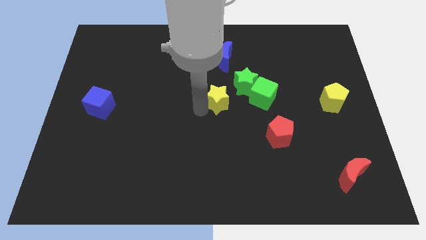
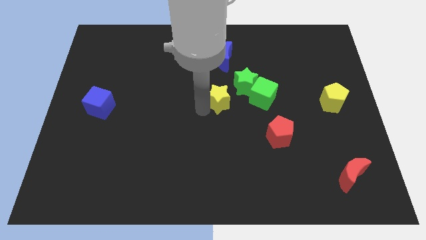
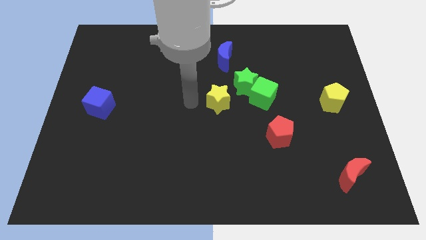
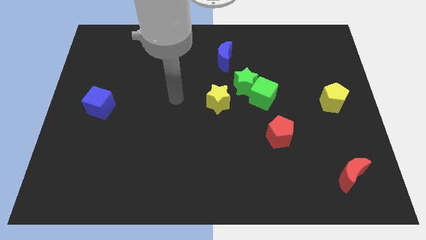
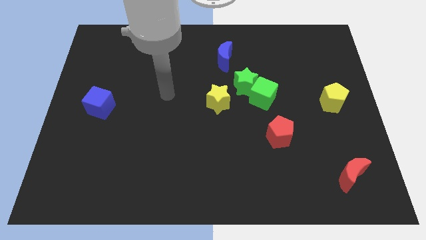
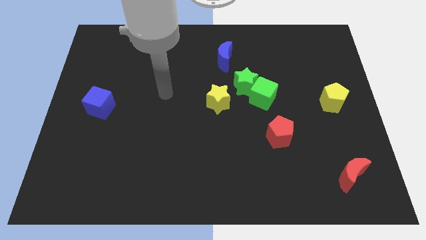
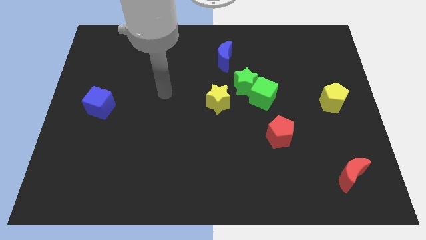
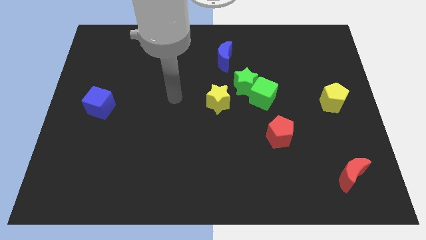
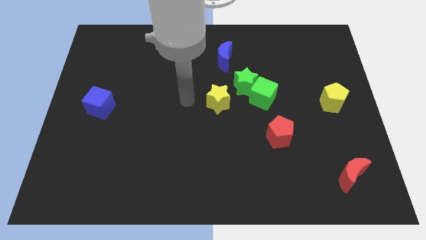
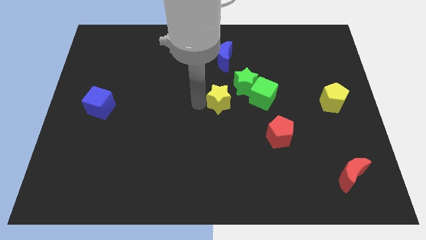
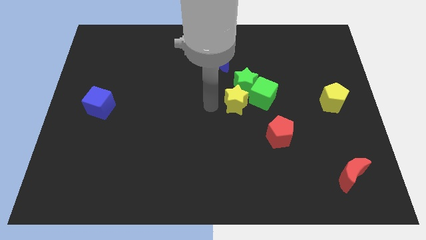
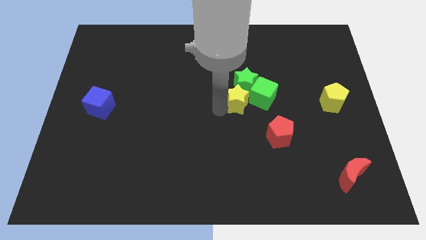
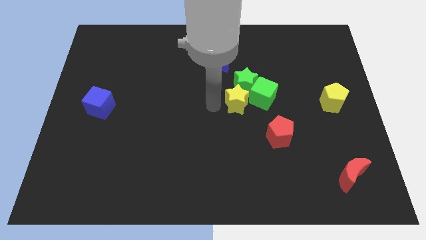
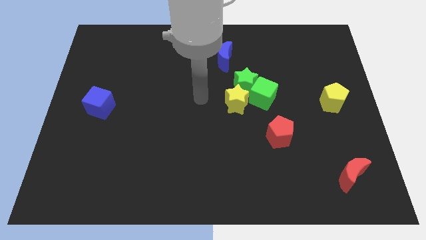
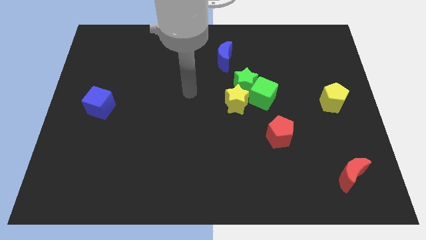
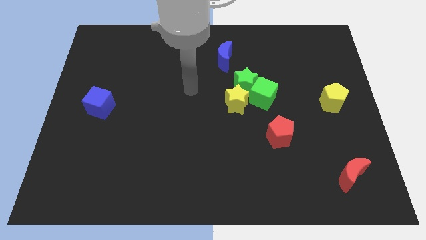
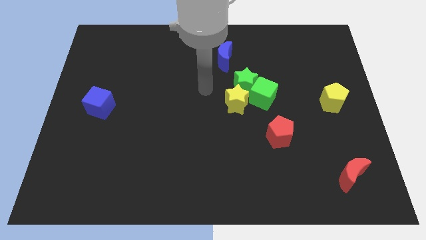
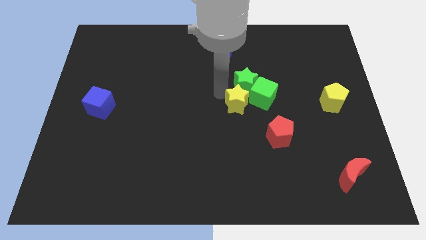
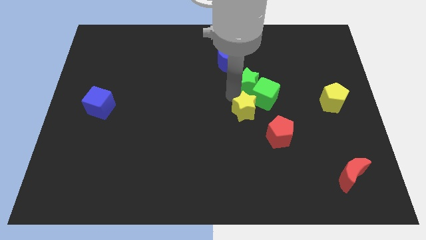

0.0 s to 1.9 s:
move the yellow star vertically below the green star

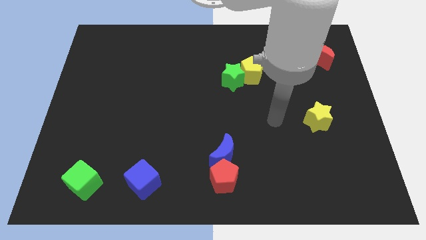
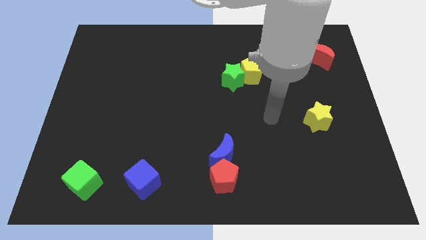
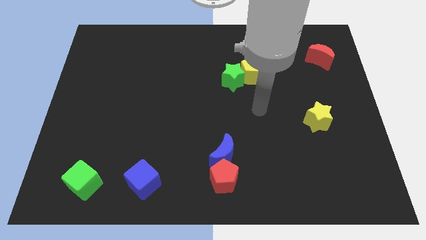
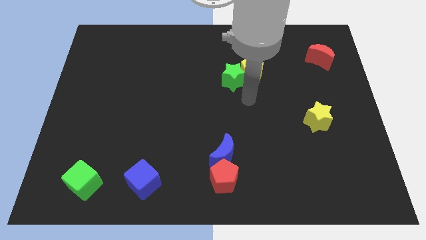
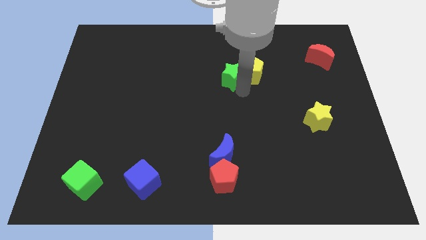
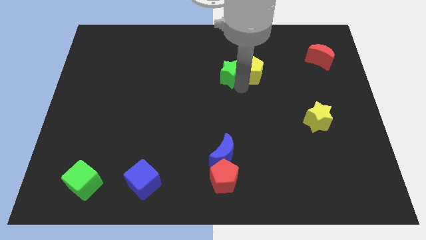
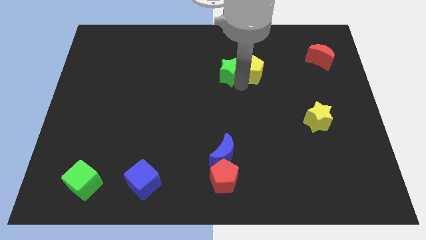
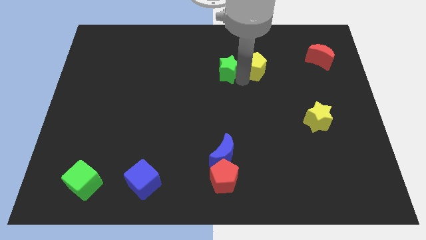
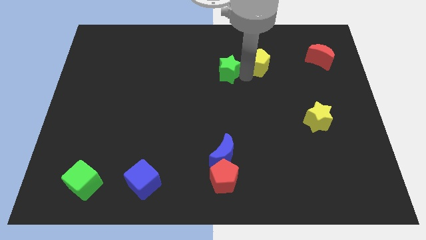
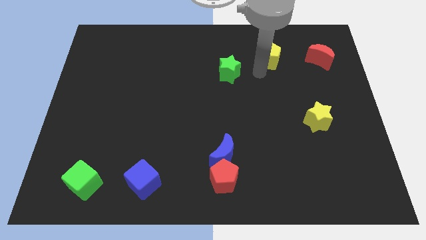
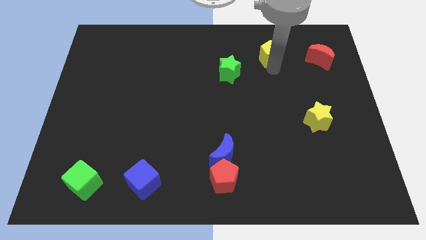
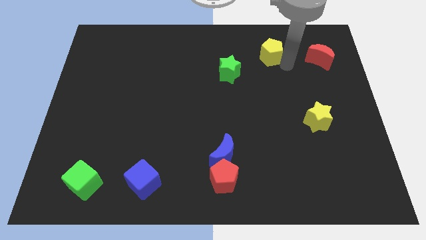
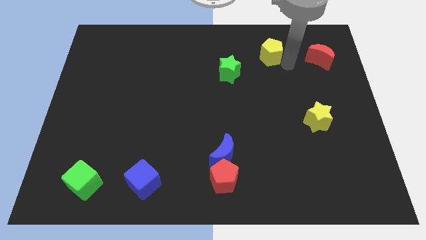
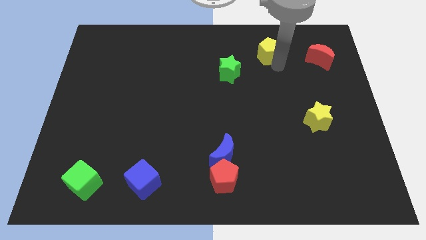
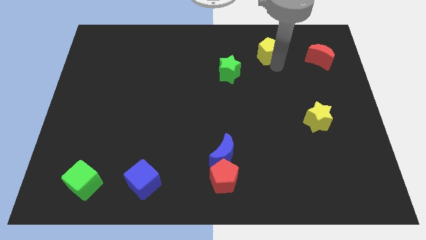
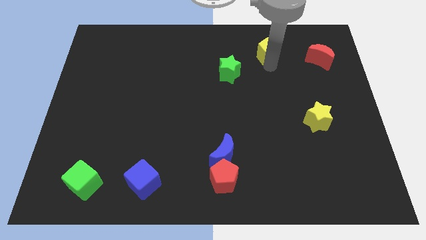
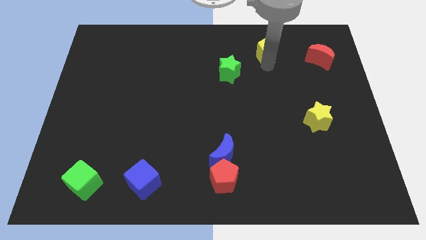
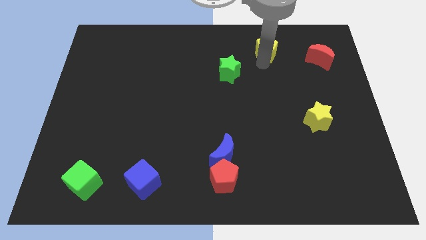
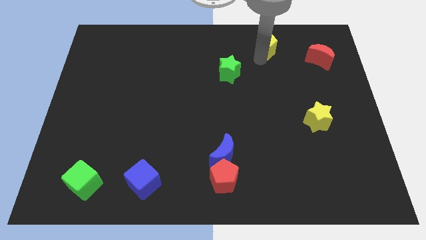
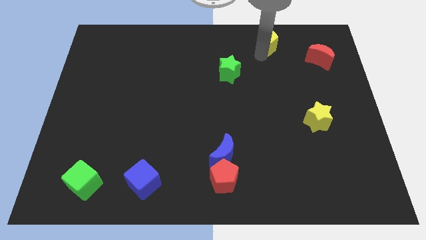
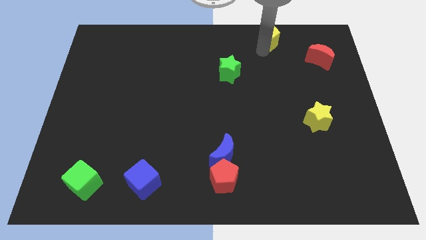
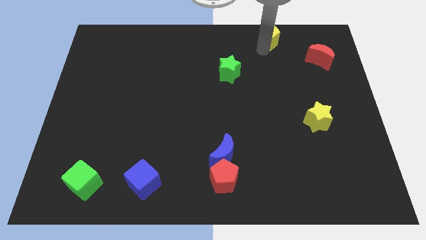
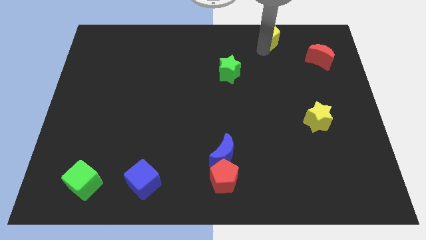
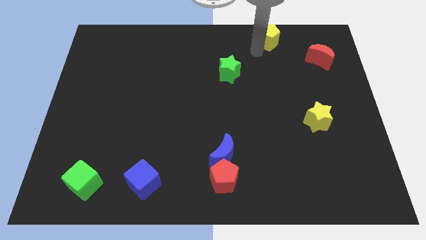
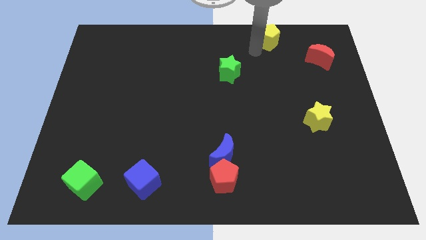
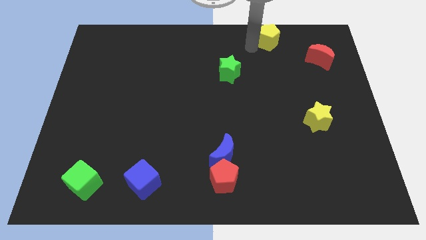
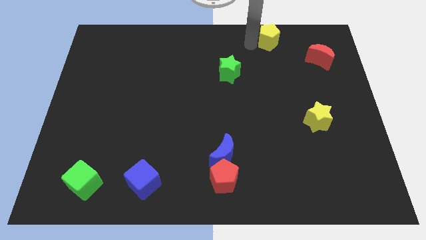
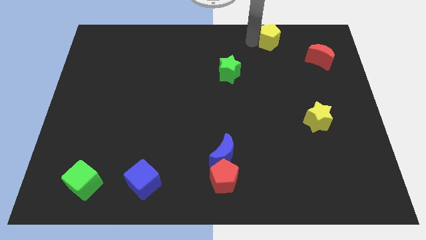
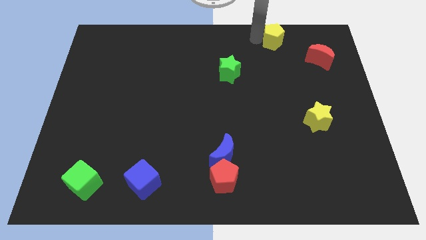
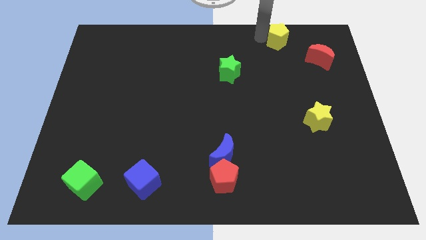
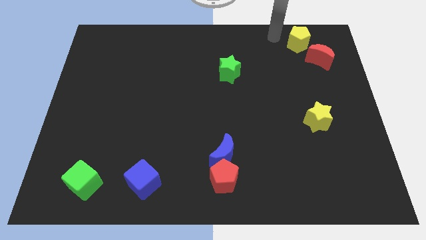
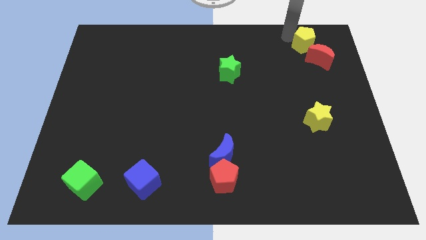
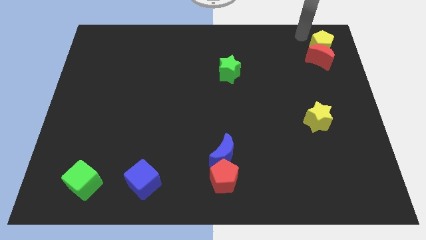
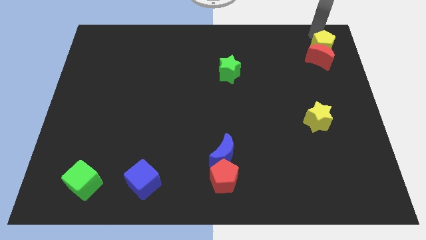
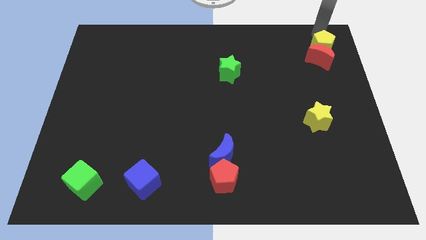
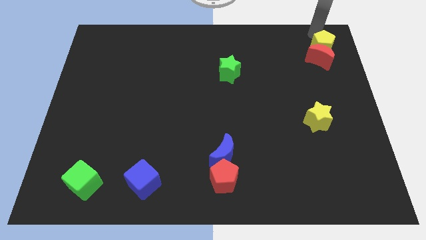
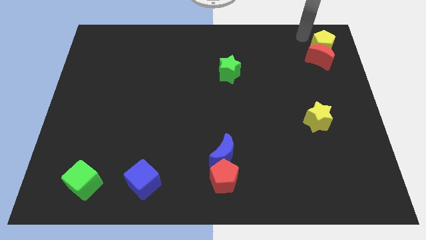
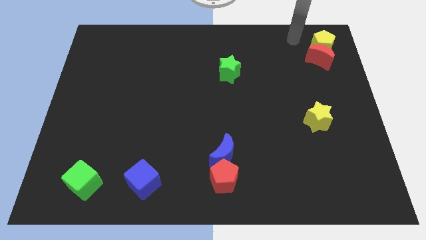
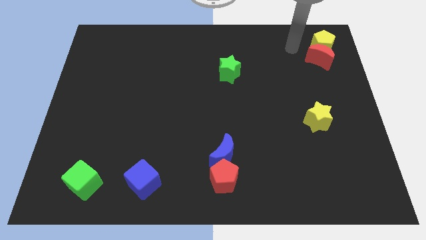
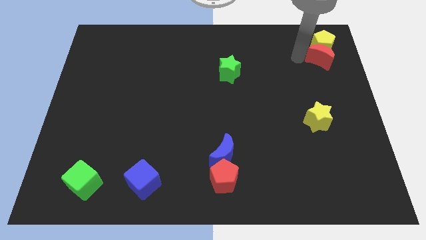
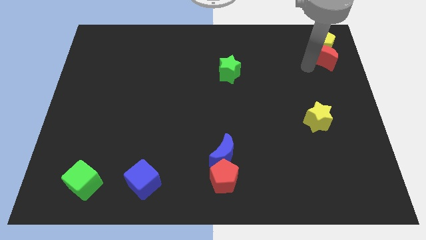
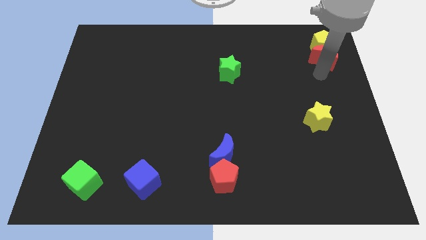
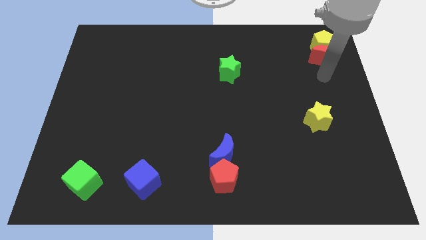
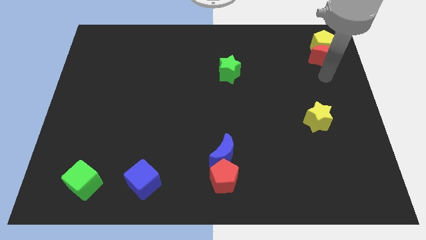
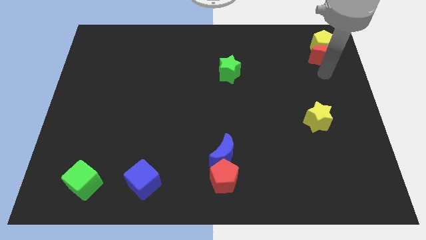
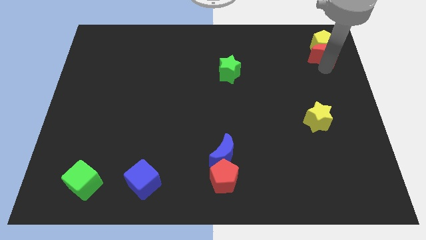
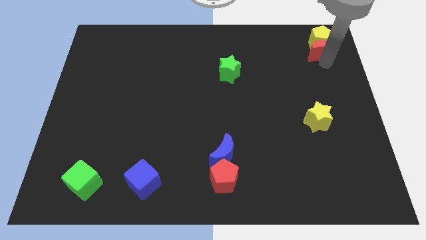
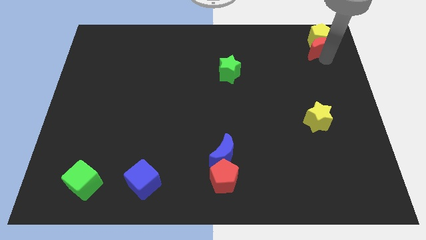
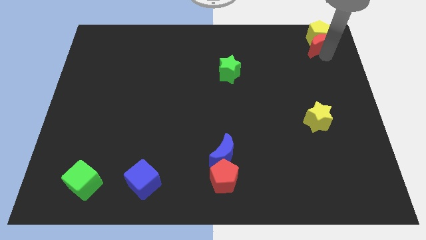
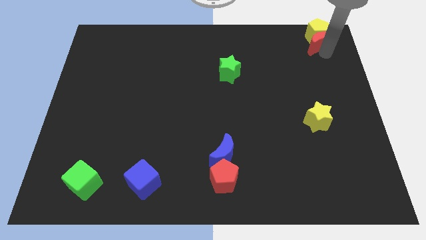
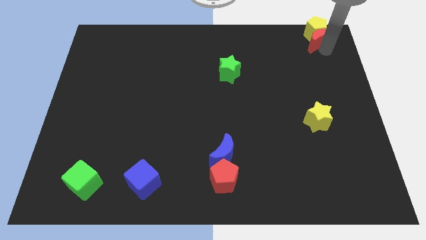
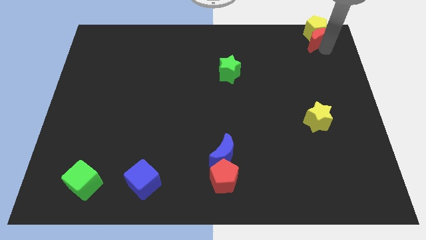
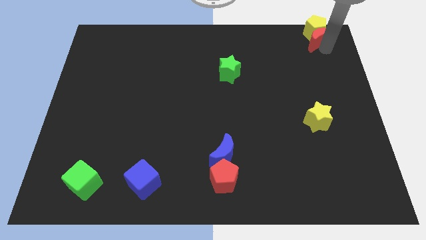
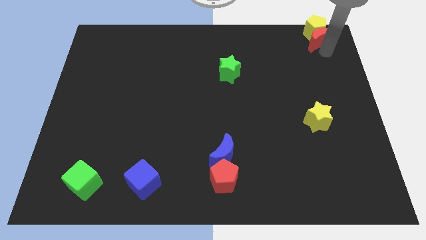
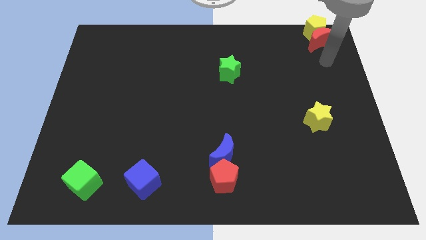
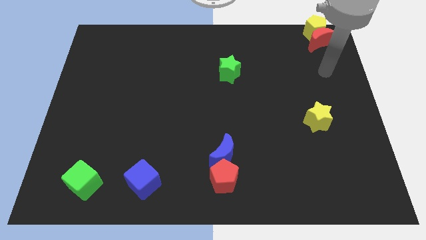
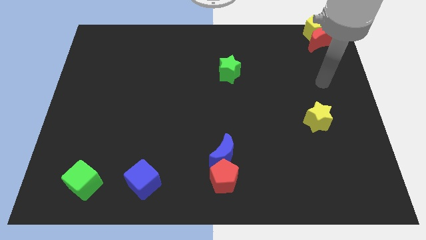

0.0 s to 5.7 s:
push the yellow pentagon with red moon to the top right corner

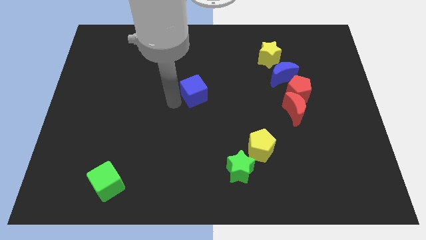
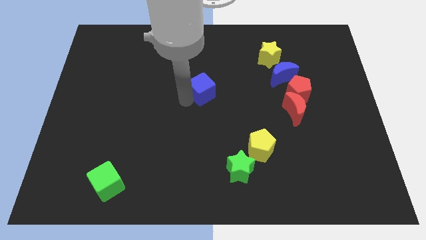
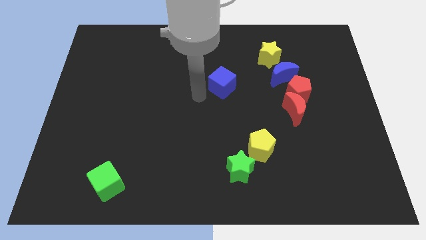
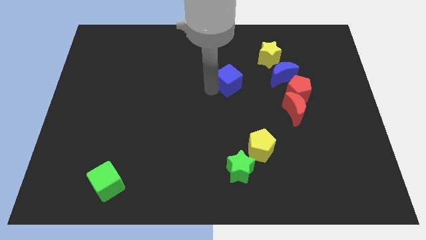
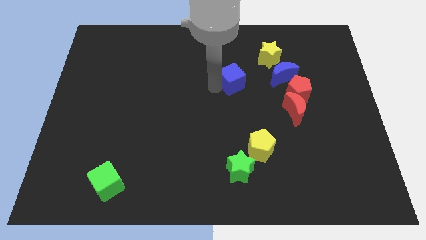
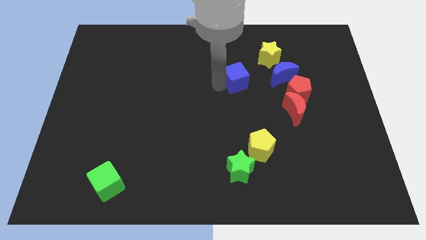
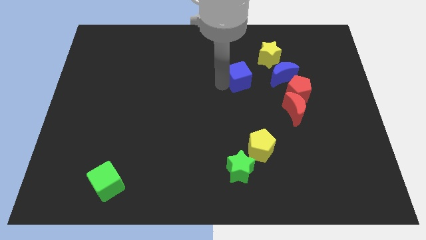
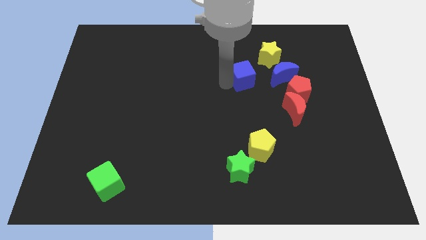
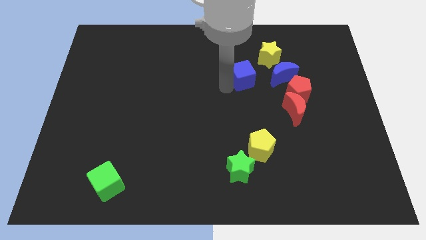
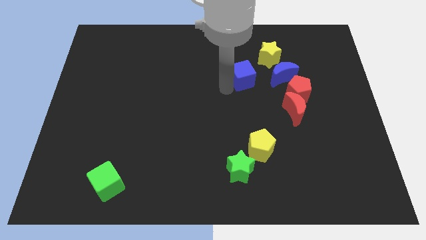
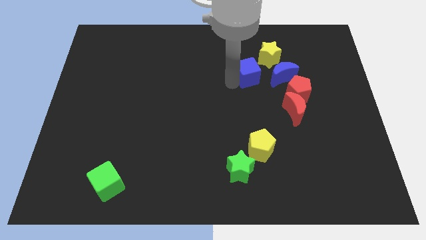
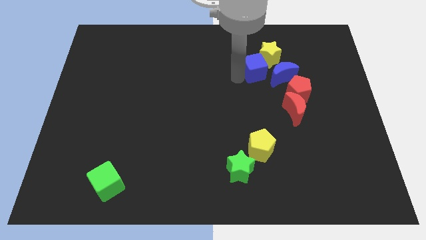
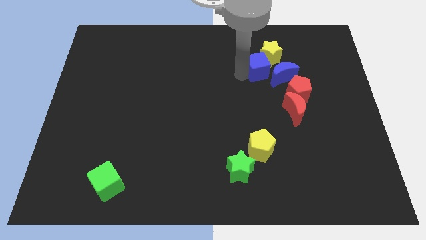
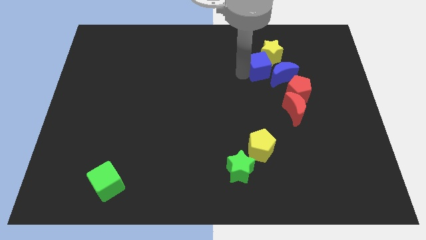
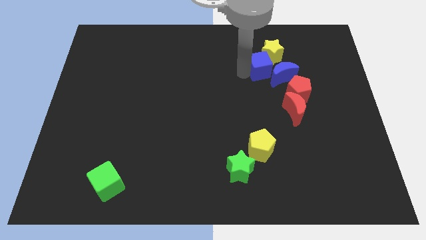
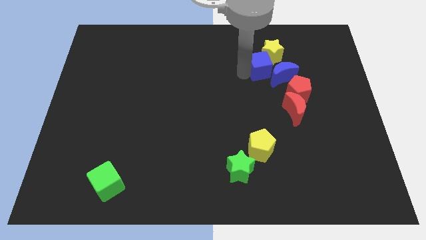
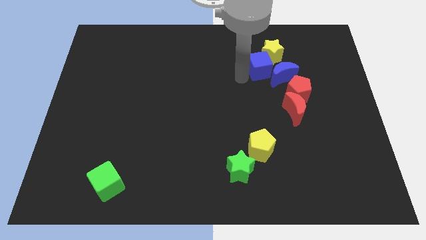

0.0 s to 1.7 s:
push the blue cube into yellow star
